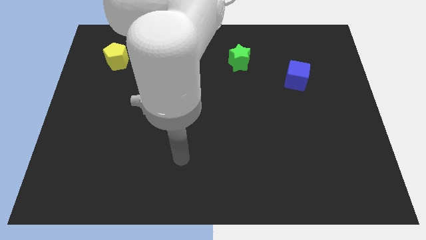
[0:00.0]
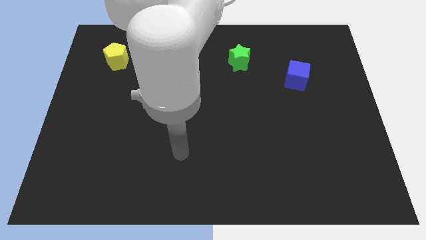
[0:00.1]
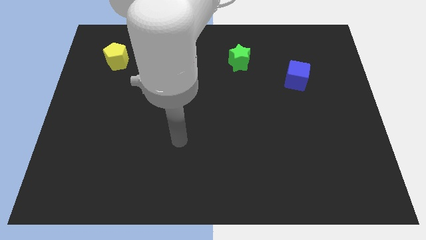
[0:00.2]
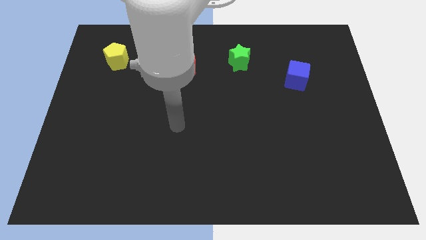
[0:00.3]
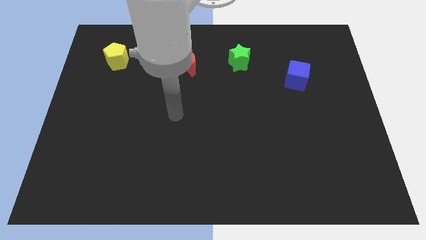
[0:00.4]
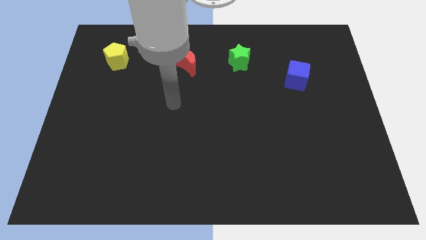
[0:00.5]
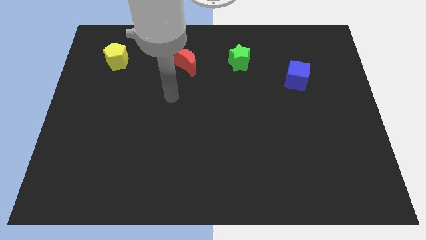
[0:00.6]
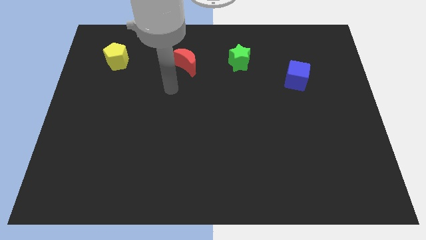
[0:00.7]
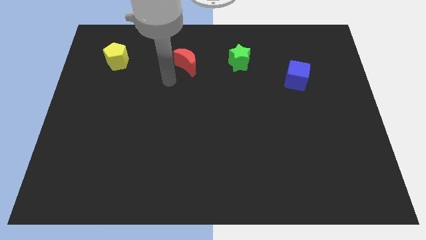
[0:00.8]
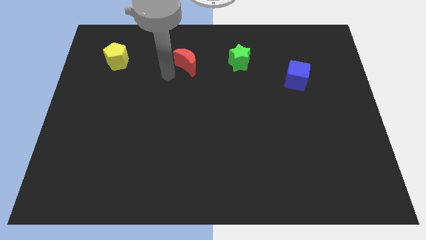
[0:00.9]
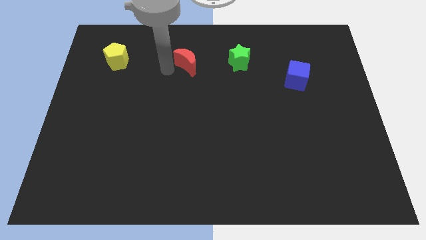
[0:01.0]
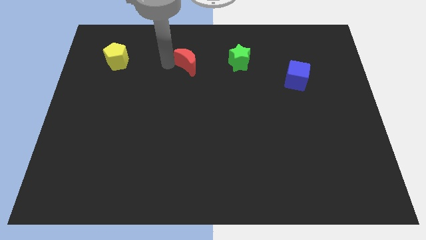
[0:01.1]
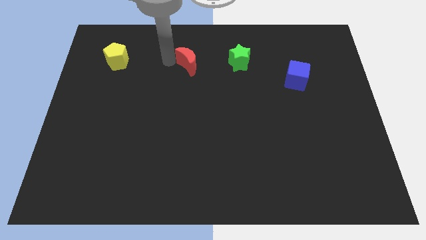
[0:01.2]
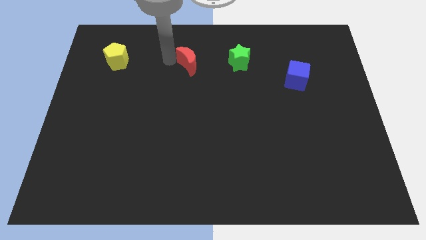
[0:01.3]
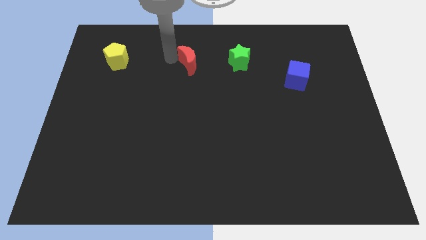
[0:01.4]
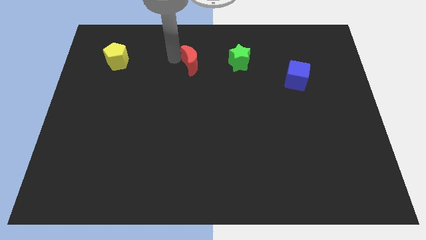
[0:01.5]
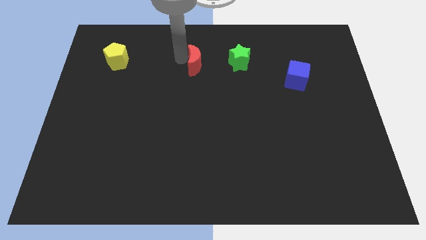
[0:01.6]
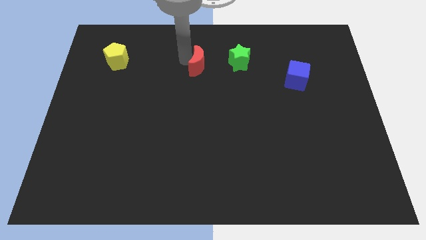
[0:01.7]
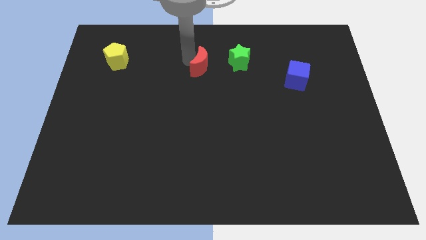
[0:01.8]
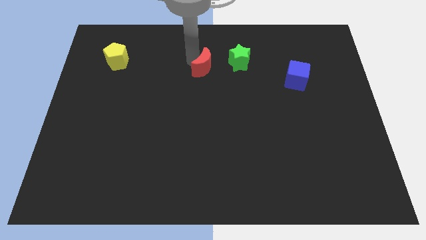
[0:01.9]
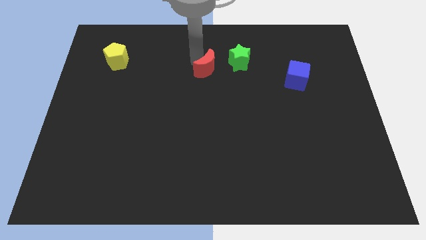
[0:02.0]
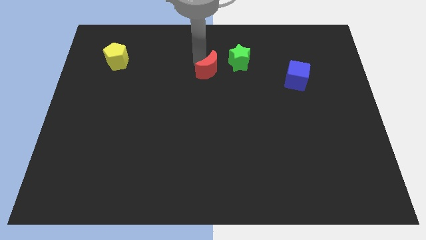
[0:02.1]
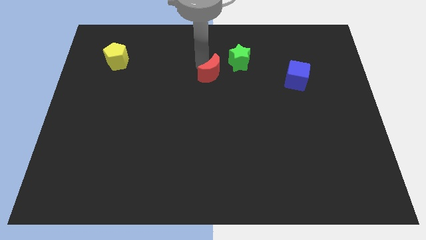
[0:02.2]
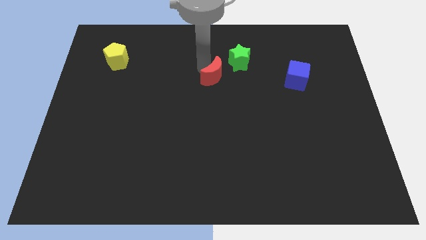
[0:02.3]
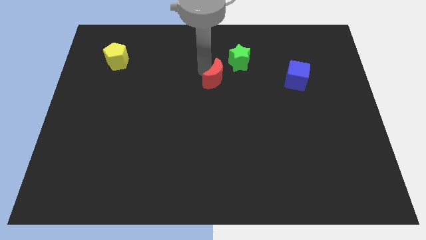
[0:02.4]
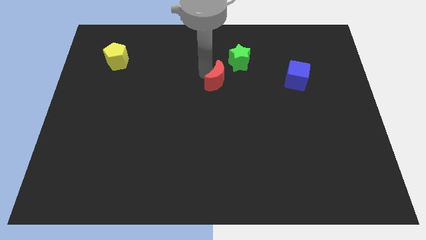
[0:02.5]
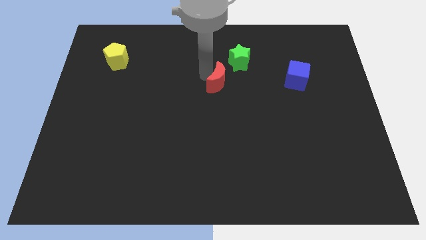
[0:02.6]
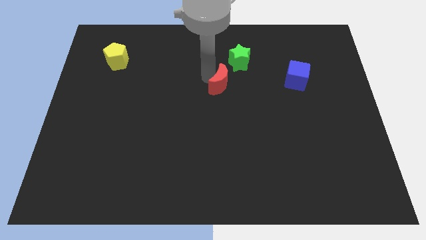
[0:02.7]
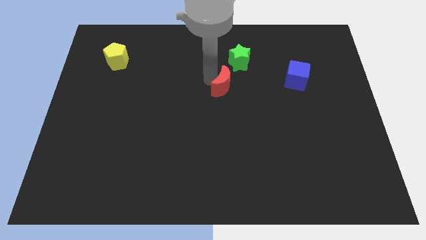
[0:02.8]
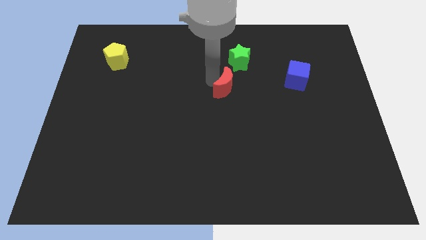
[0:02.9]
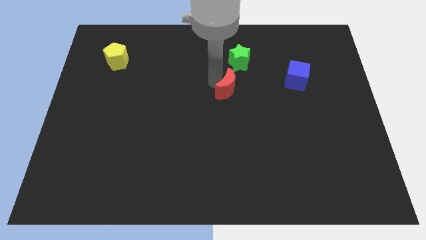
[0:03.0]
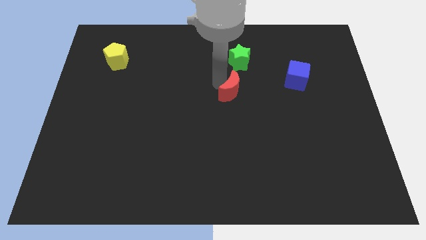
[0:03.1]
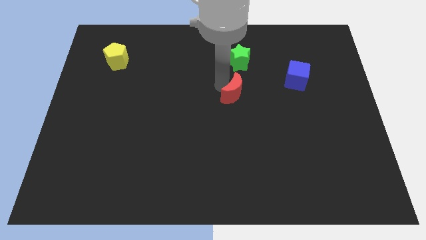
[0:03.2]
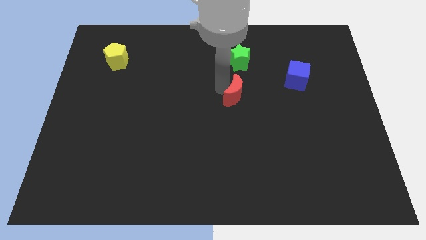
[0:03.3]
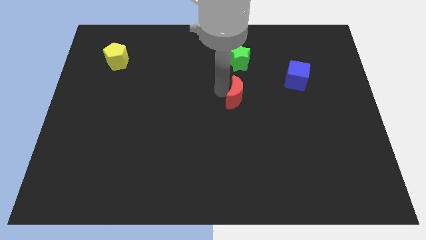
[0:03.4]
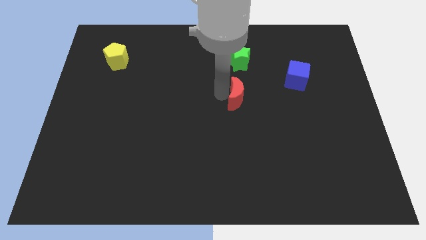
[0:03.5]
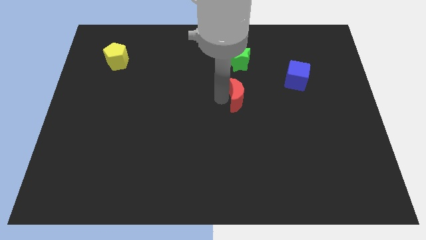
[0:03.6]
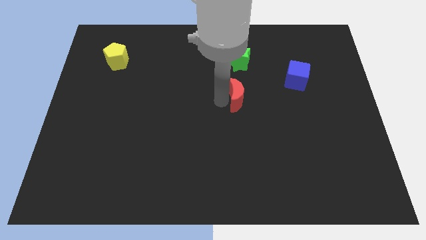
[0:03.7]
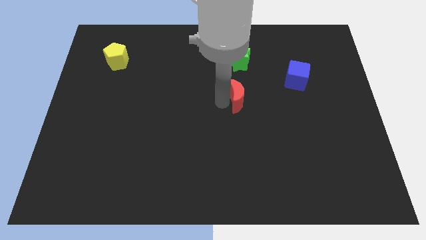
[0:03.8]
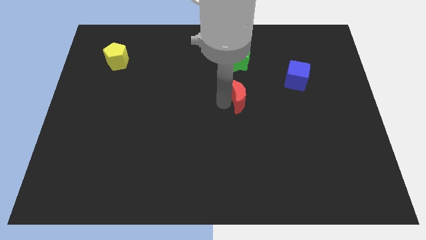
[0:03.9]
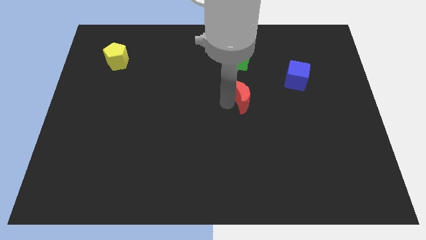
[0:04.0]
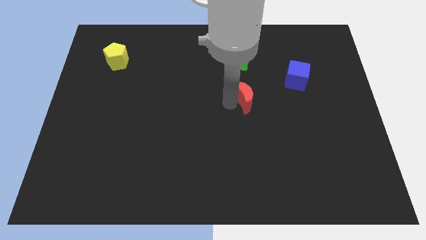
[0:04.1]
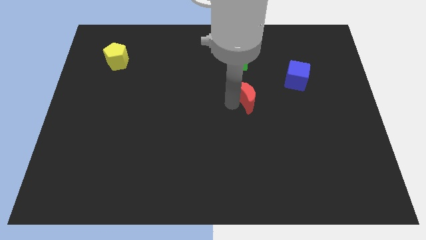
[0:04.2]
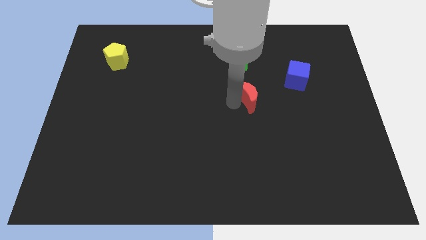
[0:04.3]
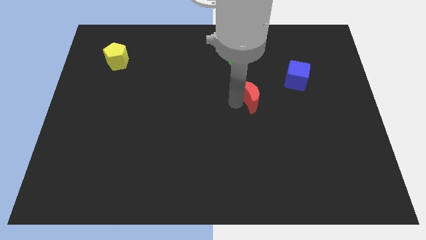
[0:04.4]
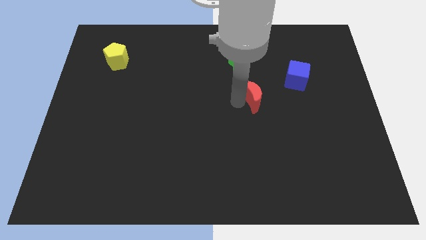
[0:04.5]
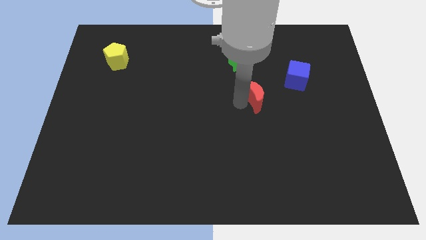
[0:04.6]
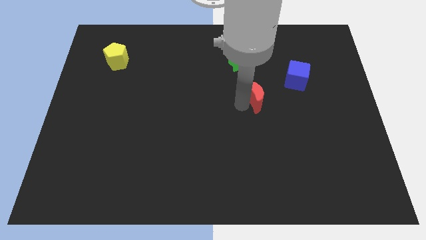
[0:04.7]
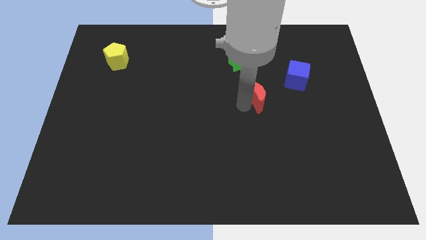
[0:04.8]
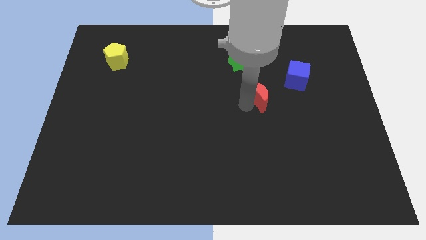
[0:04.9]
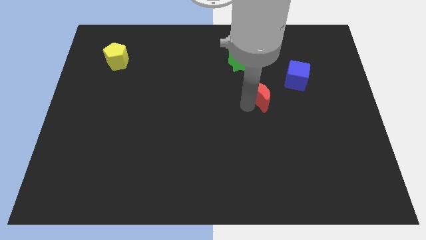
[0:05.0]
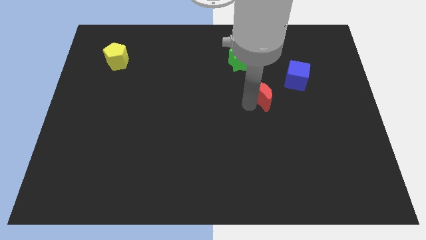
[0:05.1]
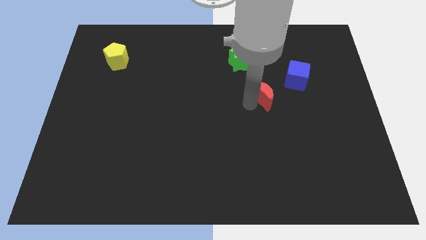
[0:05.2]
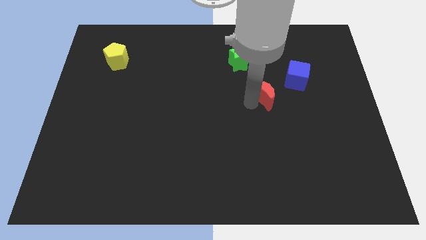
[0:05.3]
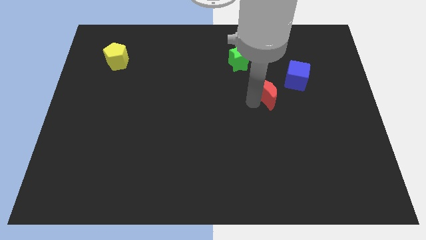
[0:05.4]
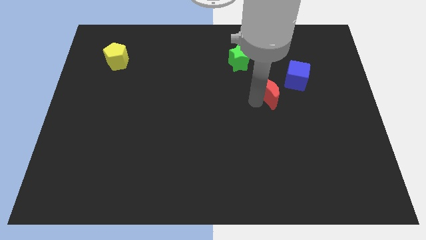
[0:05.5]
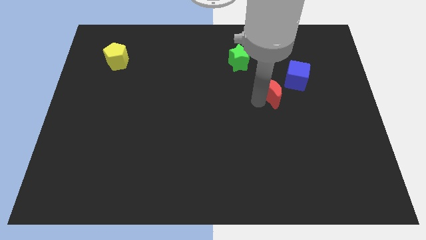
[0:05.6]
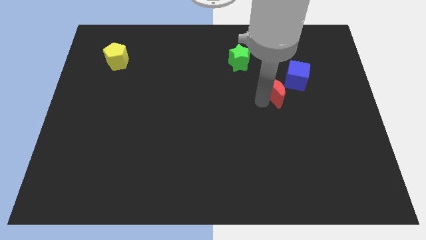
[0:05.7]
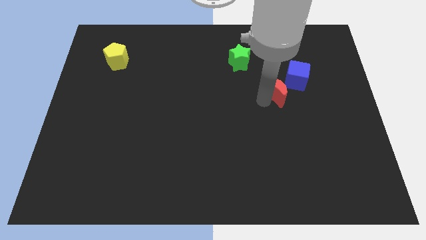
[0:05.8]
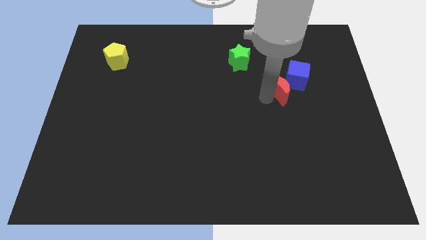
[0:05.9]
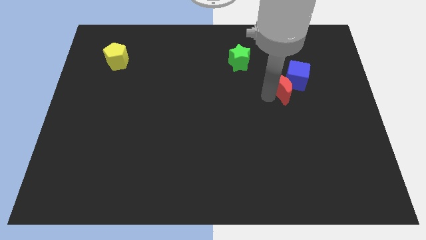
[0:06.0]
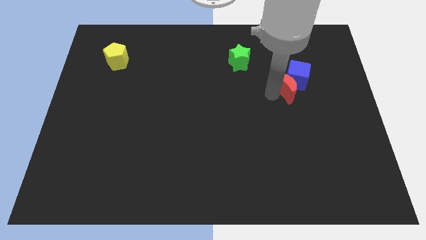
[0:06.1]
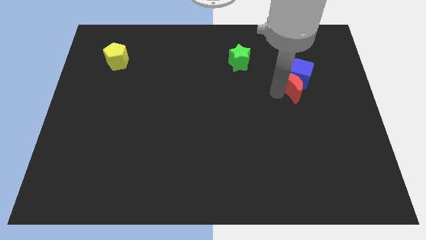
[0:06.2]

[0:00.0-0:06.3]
slide the moon close to the blue block

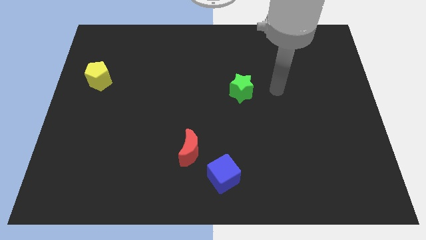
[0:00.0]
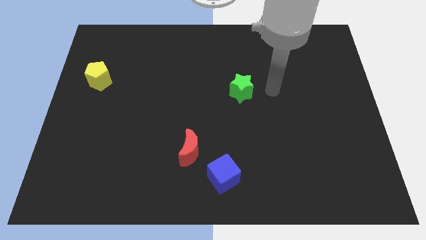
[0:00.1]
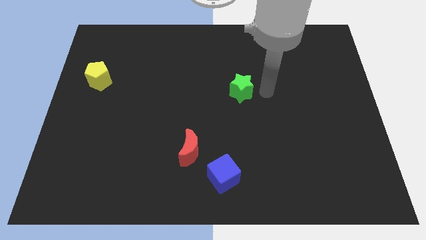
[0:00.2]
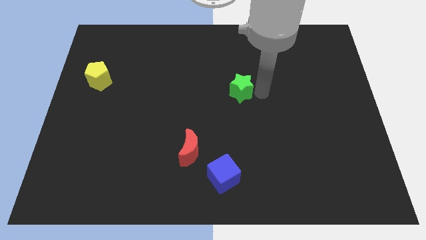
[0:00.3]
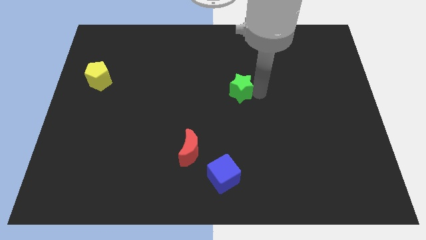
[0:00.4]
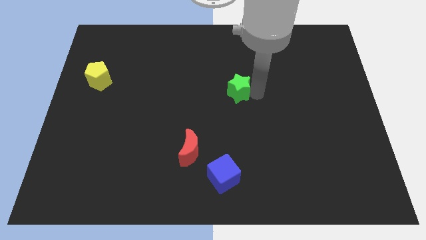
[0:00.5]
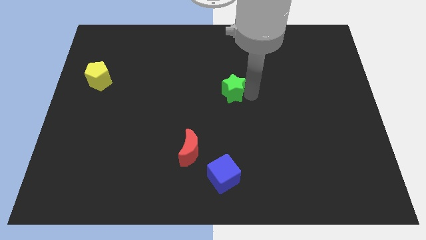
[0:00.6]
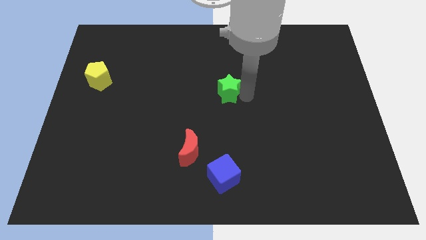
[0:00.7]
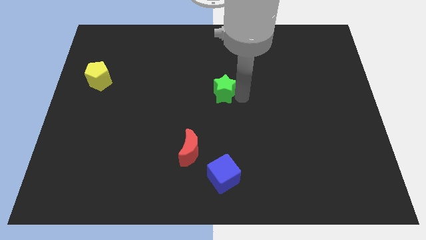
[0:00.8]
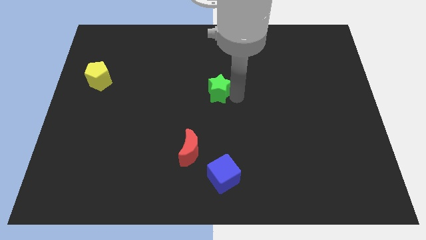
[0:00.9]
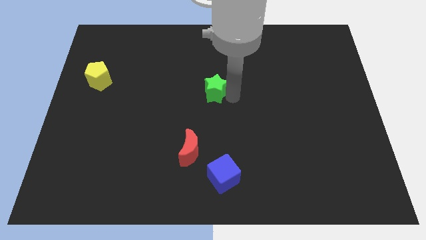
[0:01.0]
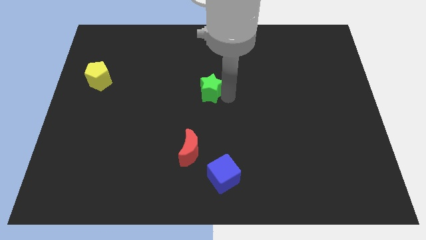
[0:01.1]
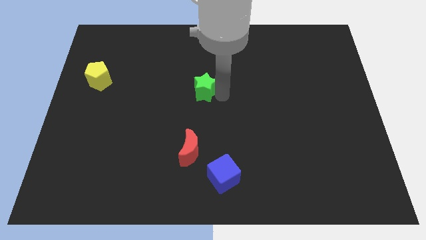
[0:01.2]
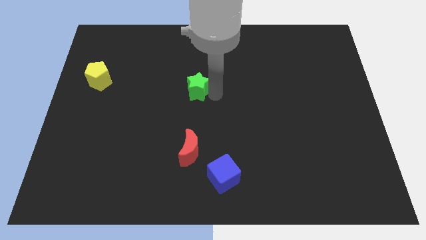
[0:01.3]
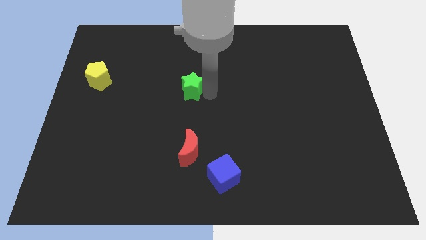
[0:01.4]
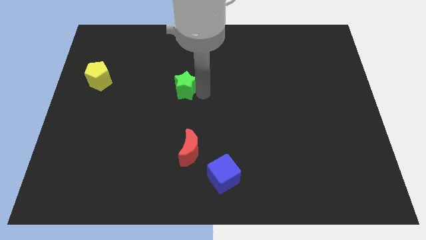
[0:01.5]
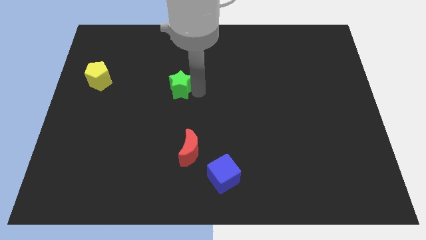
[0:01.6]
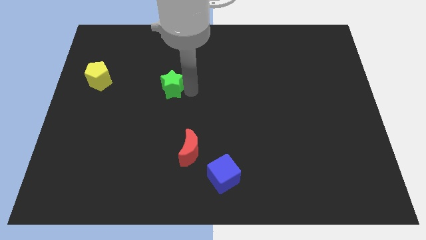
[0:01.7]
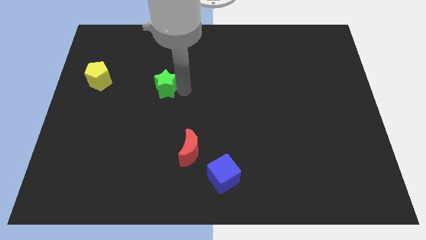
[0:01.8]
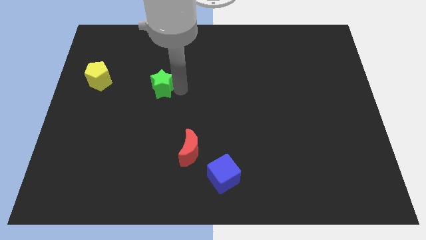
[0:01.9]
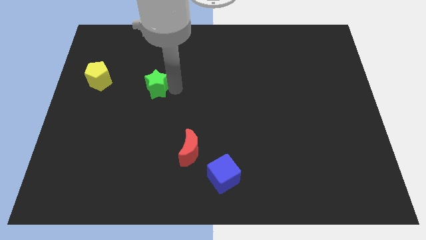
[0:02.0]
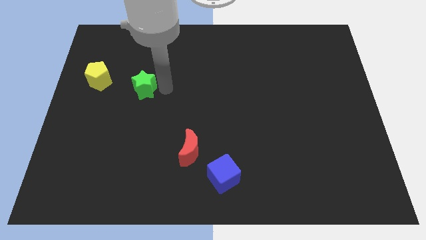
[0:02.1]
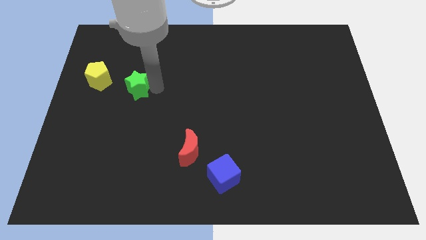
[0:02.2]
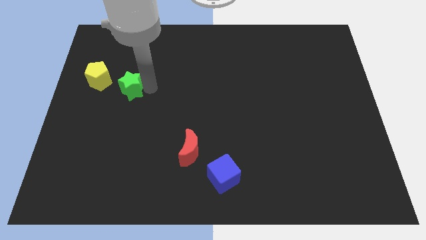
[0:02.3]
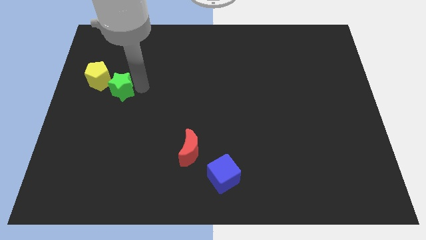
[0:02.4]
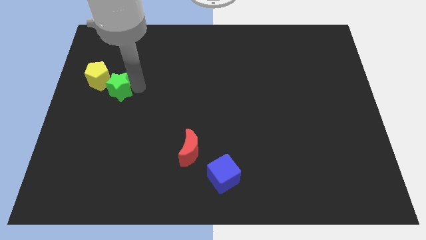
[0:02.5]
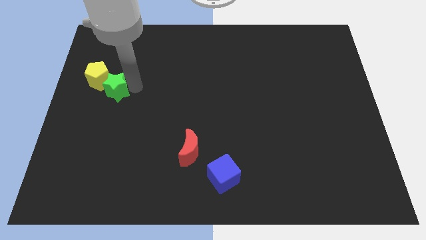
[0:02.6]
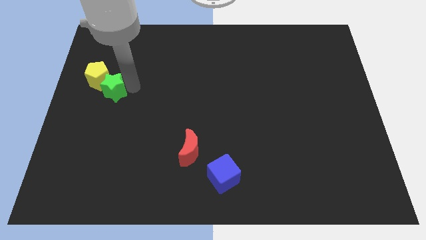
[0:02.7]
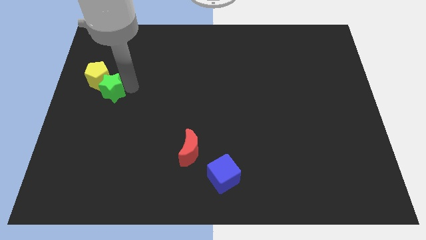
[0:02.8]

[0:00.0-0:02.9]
put the star close to the pentagon
